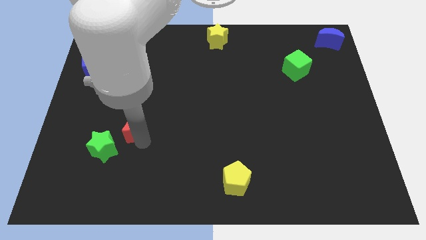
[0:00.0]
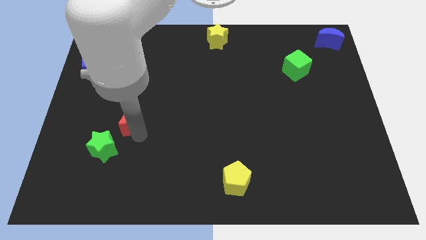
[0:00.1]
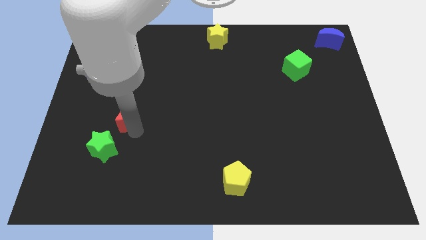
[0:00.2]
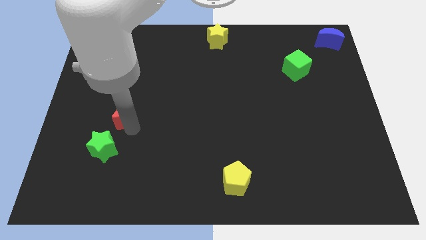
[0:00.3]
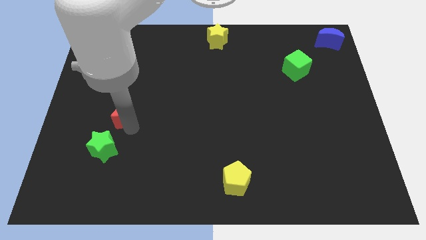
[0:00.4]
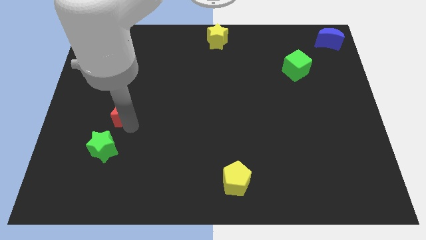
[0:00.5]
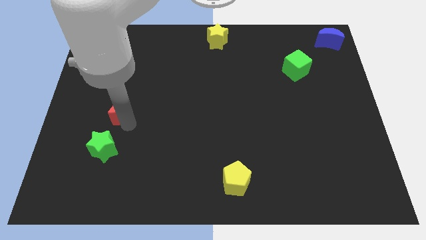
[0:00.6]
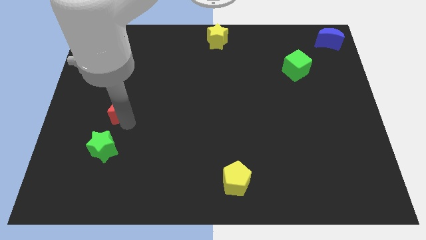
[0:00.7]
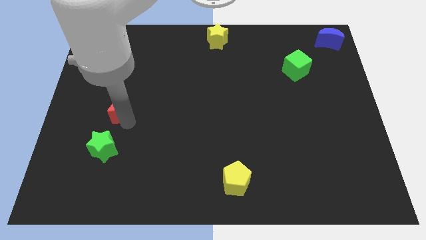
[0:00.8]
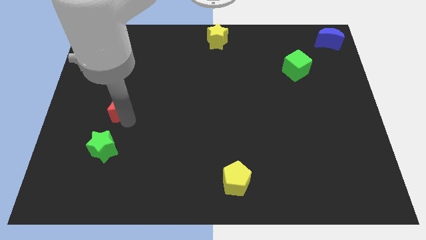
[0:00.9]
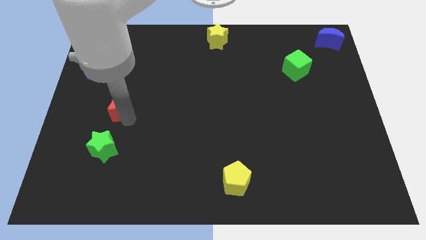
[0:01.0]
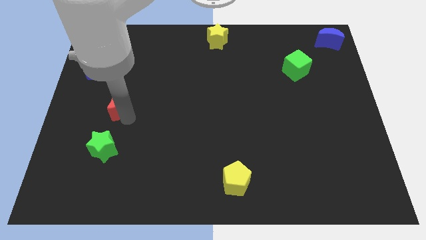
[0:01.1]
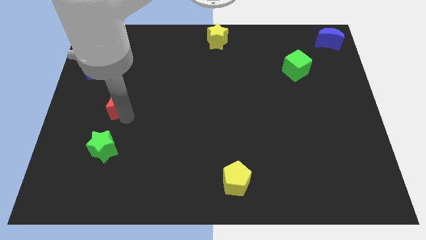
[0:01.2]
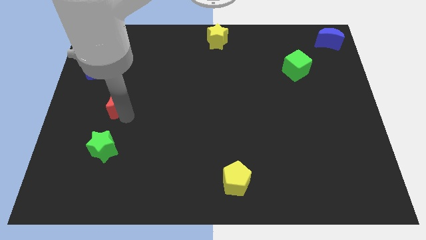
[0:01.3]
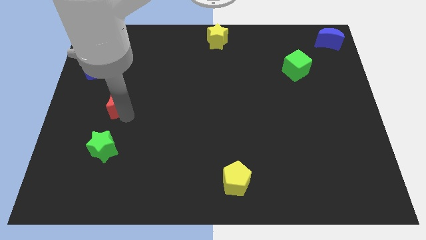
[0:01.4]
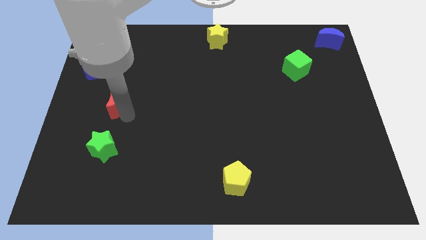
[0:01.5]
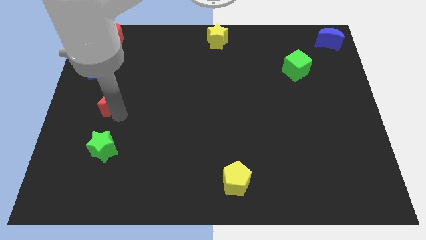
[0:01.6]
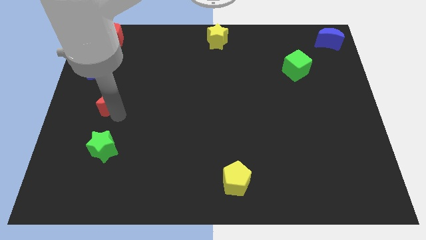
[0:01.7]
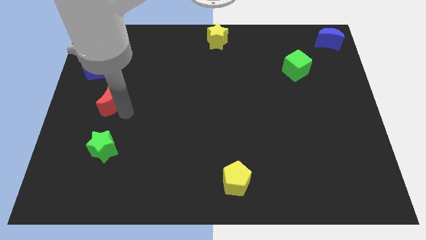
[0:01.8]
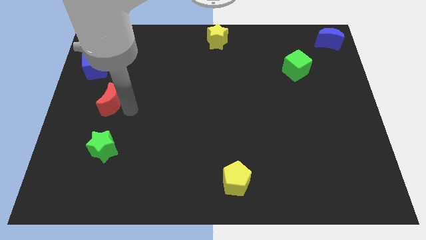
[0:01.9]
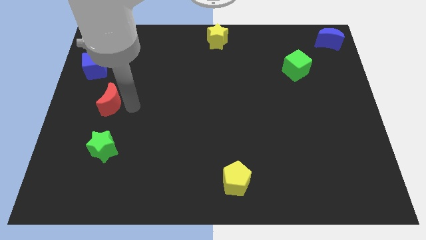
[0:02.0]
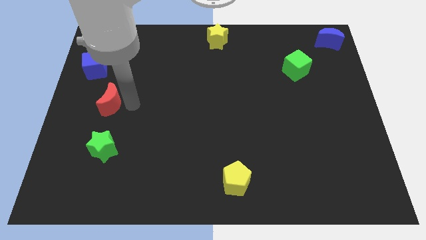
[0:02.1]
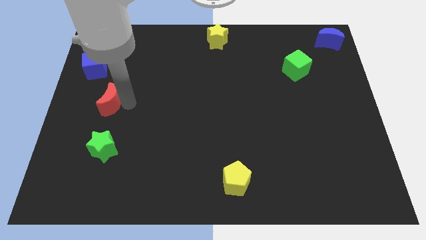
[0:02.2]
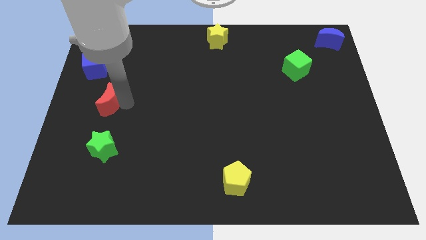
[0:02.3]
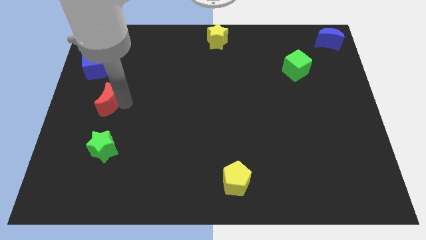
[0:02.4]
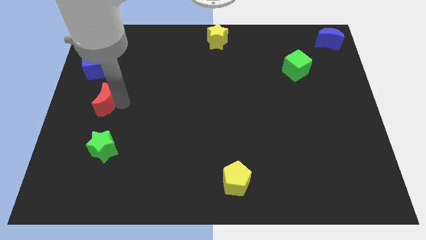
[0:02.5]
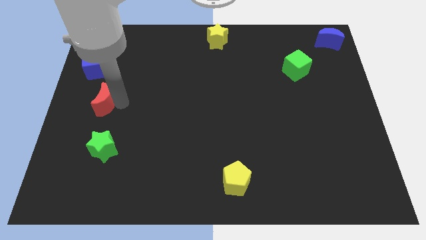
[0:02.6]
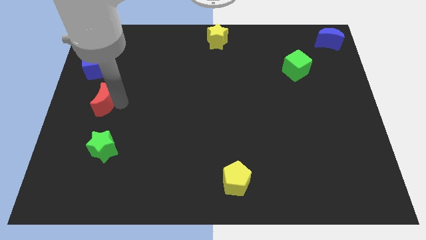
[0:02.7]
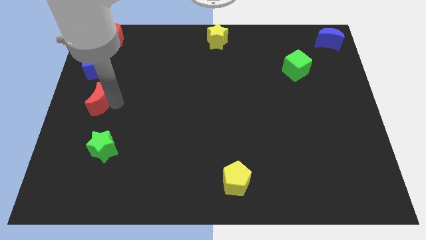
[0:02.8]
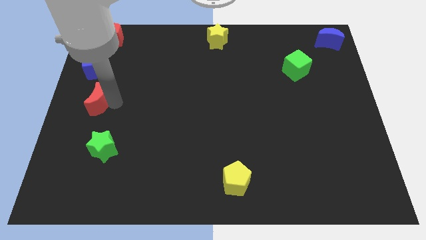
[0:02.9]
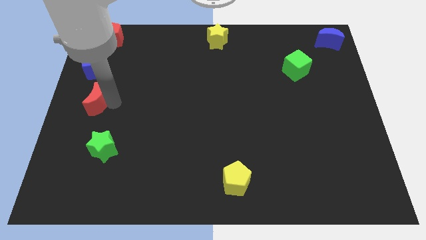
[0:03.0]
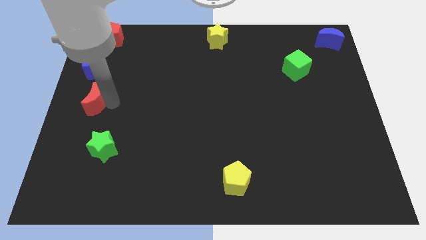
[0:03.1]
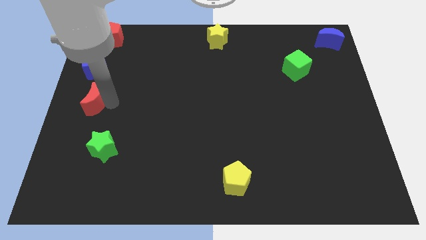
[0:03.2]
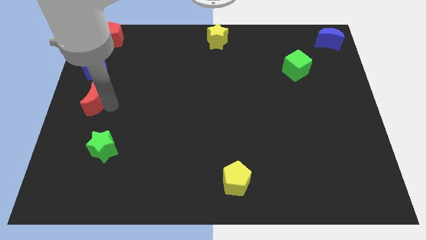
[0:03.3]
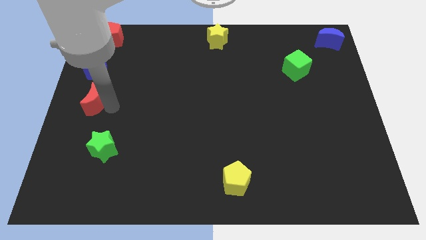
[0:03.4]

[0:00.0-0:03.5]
place red moon between blue cube and green star

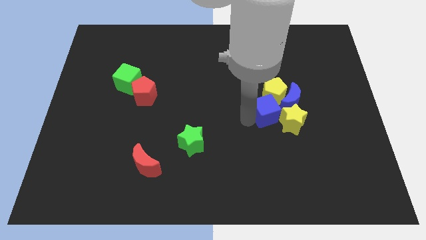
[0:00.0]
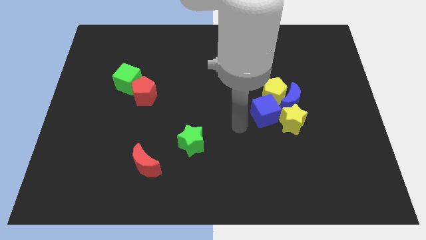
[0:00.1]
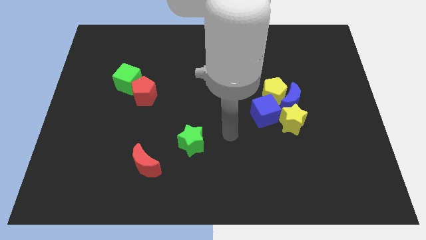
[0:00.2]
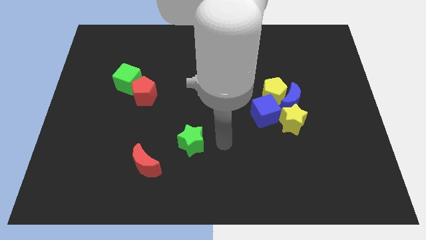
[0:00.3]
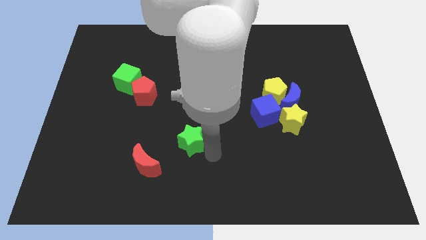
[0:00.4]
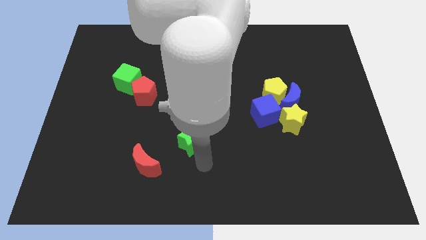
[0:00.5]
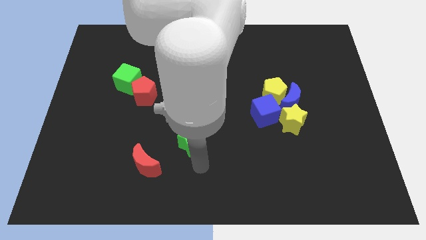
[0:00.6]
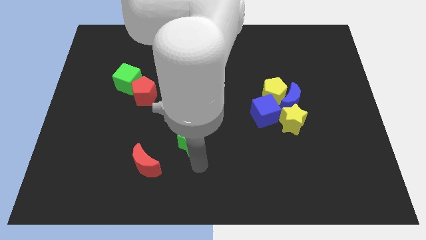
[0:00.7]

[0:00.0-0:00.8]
move your arm away from blue cube

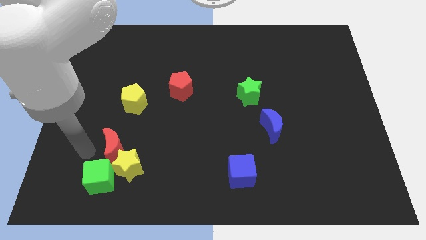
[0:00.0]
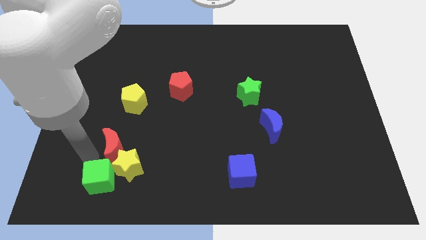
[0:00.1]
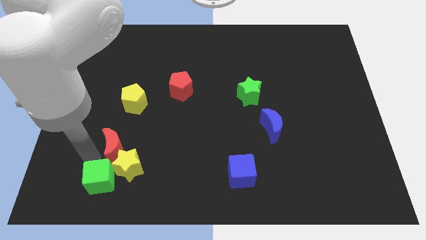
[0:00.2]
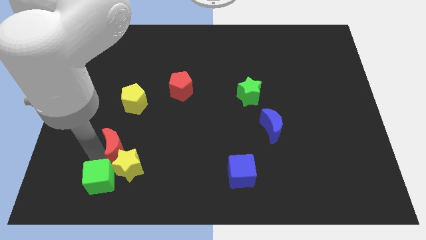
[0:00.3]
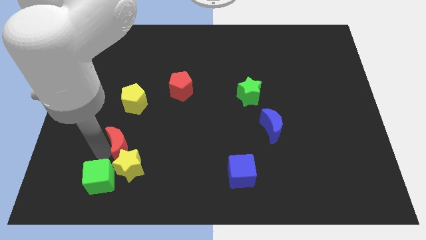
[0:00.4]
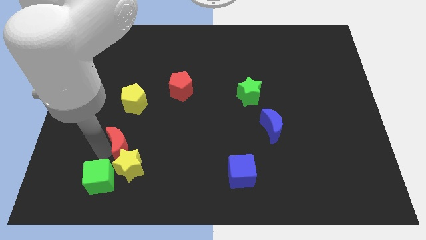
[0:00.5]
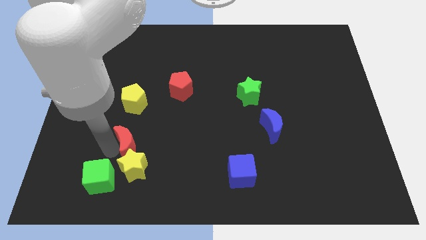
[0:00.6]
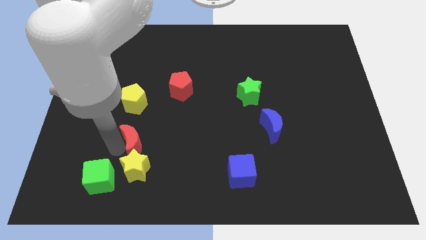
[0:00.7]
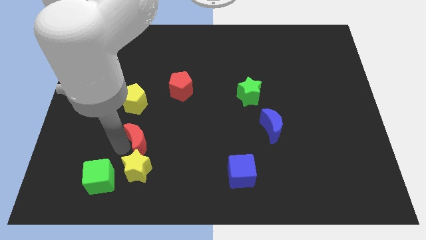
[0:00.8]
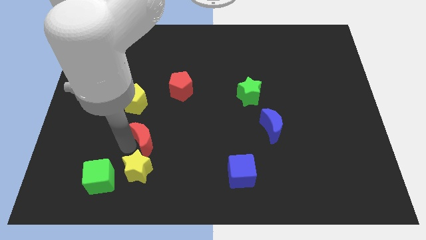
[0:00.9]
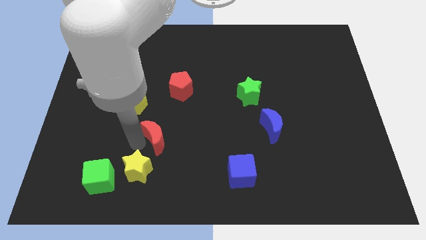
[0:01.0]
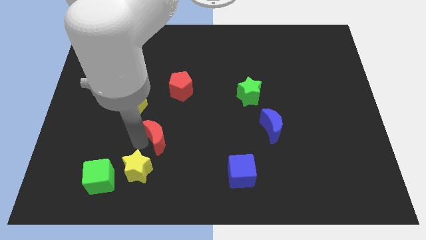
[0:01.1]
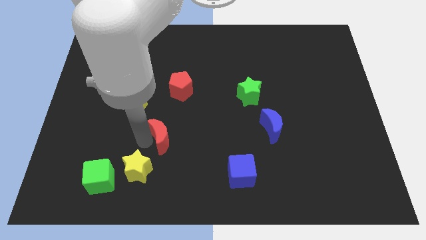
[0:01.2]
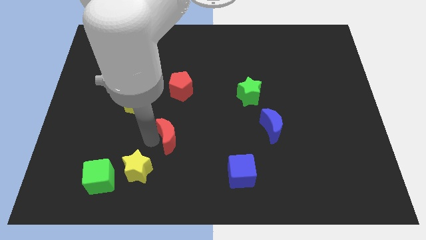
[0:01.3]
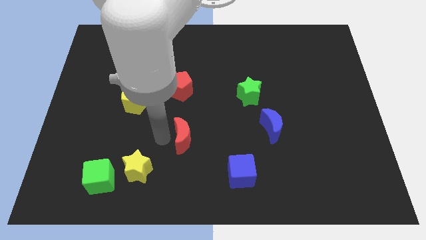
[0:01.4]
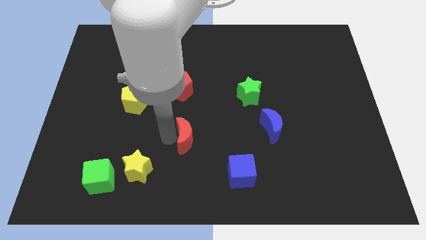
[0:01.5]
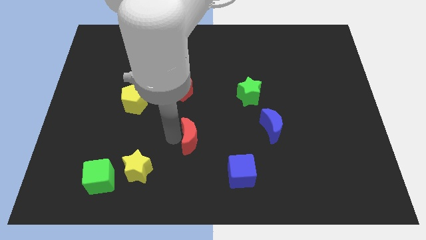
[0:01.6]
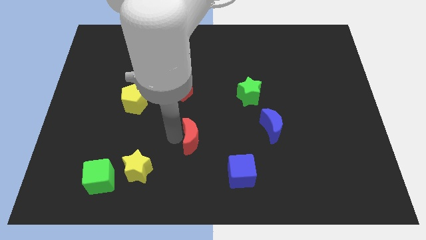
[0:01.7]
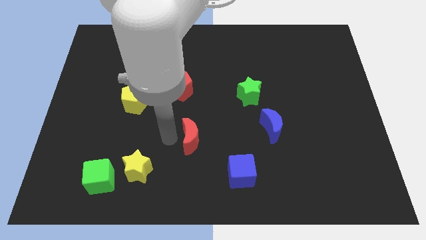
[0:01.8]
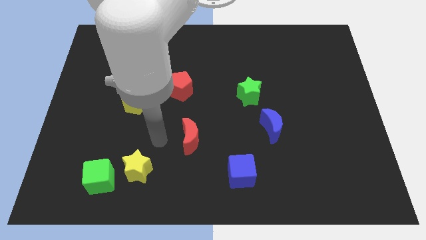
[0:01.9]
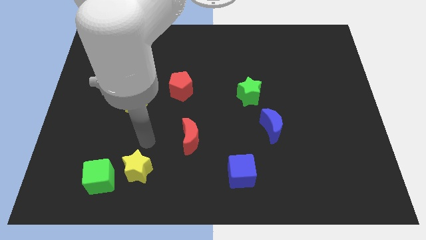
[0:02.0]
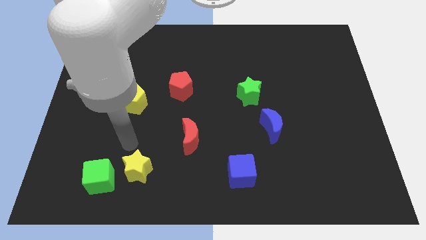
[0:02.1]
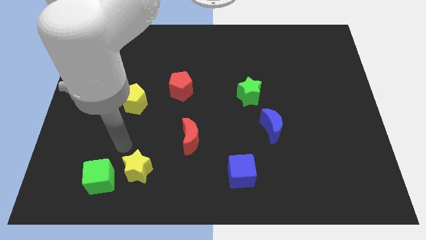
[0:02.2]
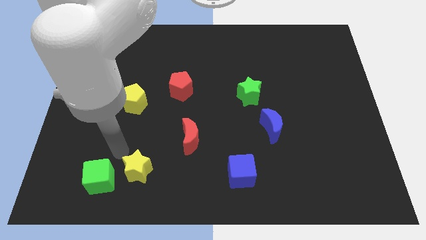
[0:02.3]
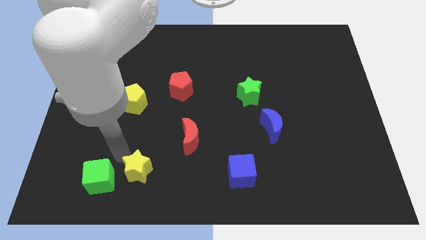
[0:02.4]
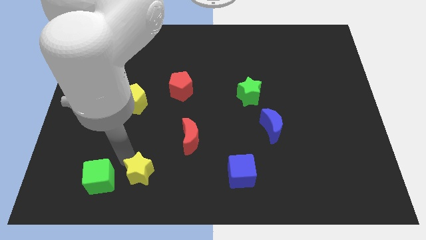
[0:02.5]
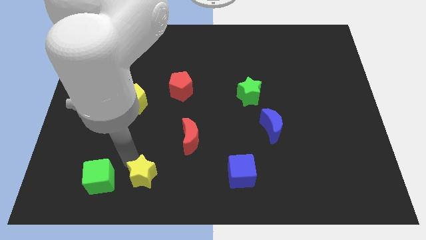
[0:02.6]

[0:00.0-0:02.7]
push the red crescent to the center of the board

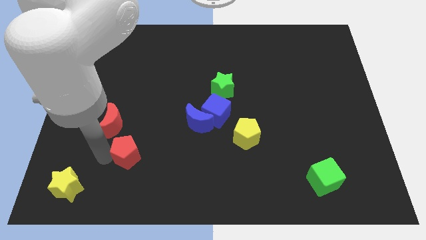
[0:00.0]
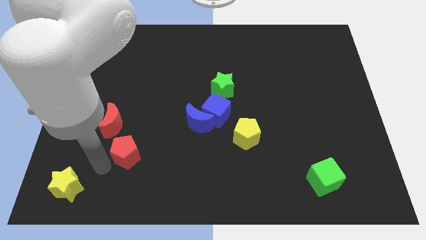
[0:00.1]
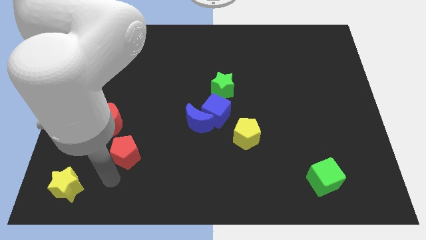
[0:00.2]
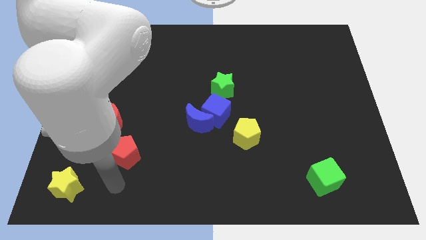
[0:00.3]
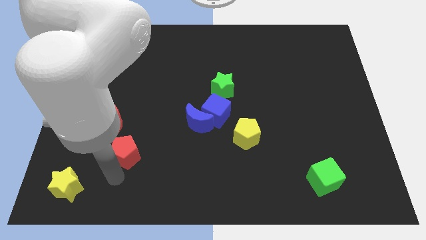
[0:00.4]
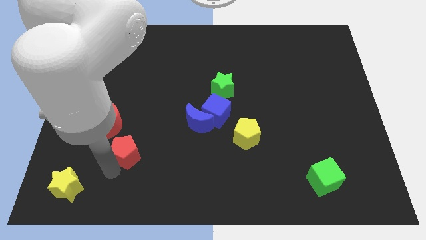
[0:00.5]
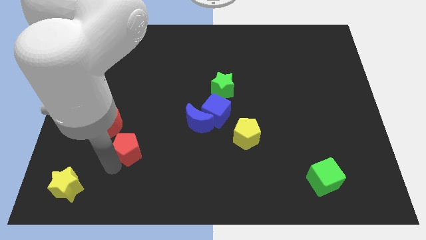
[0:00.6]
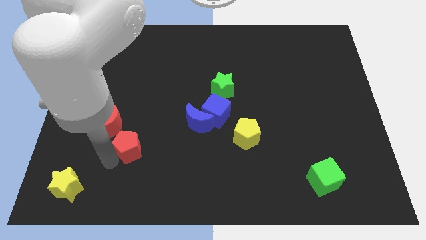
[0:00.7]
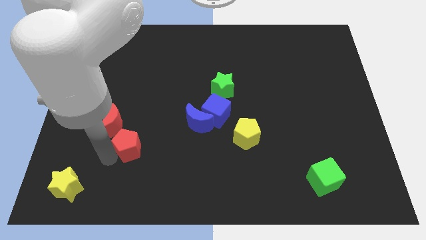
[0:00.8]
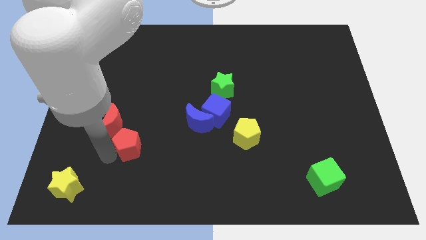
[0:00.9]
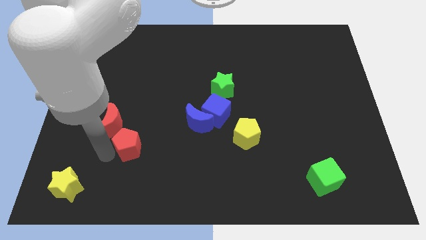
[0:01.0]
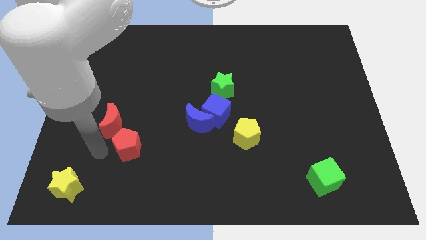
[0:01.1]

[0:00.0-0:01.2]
move the red pentagon to the bottom right of red crescent

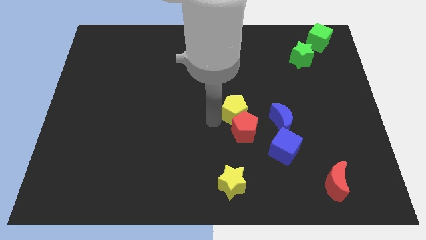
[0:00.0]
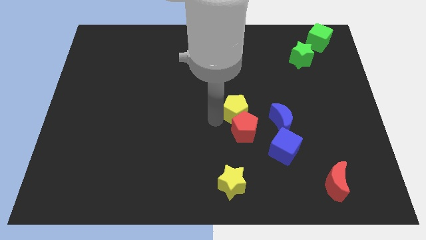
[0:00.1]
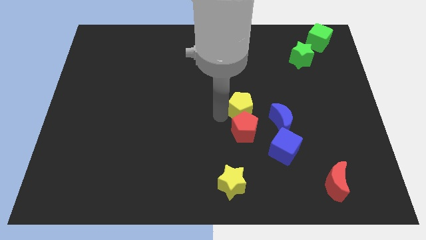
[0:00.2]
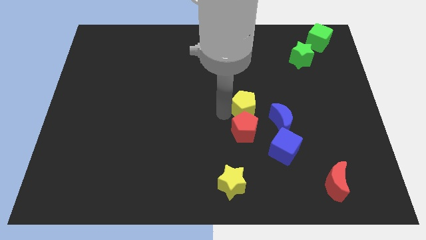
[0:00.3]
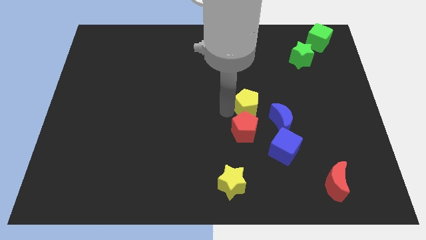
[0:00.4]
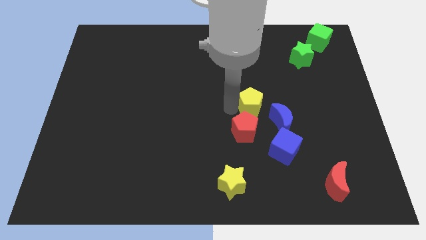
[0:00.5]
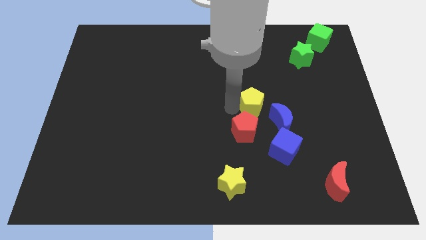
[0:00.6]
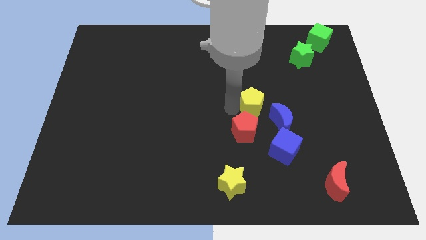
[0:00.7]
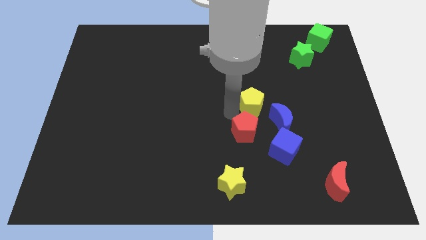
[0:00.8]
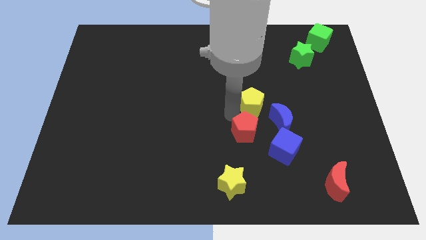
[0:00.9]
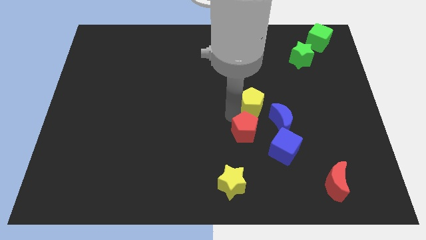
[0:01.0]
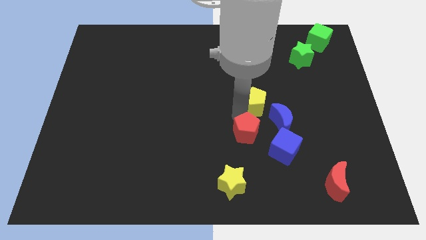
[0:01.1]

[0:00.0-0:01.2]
separate the yellow pentagon from the red pentagon
